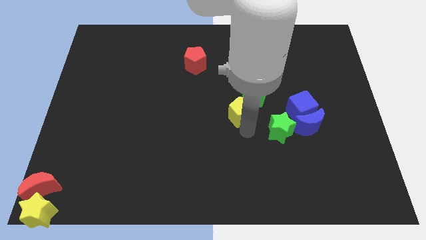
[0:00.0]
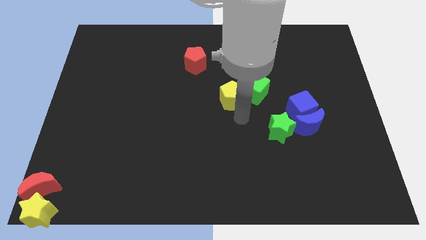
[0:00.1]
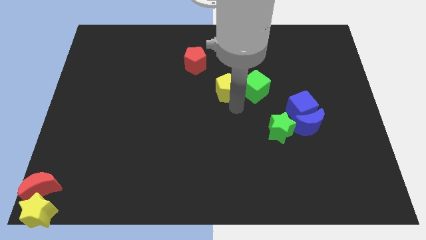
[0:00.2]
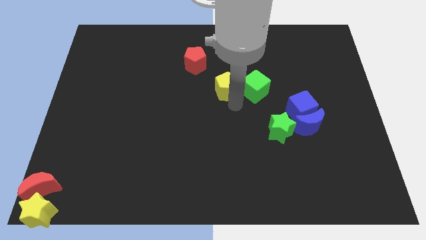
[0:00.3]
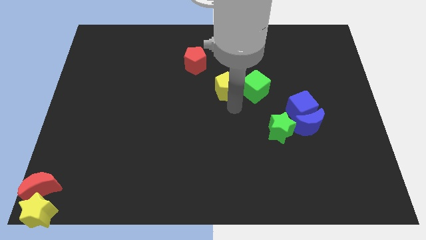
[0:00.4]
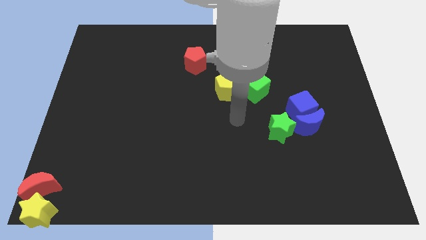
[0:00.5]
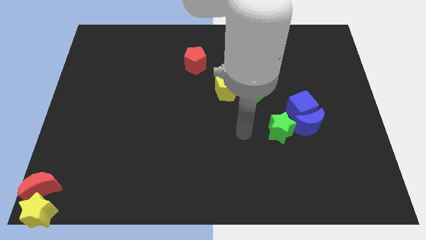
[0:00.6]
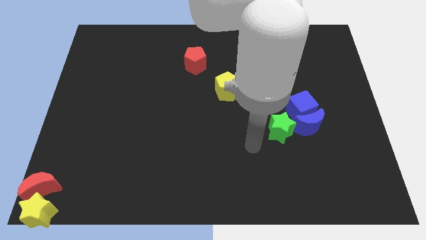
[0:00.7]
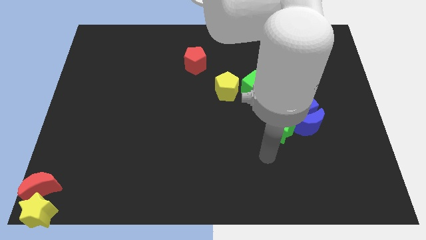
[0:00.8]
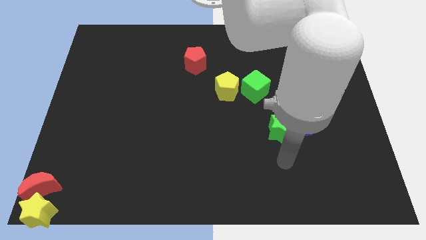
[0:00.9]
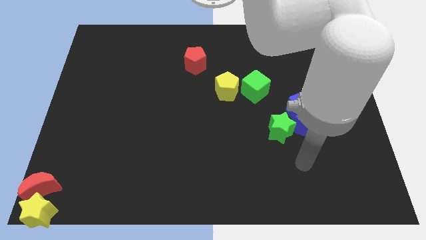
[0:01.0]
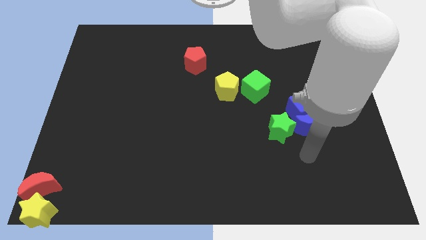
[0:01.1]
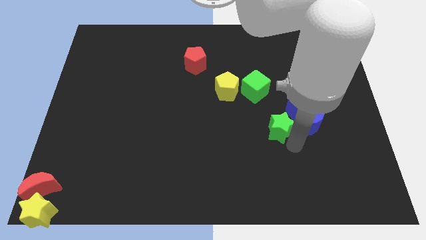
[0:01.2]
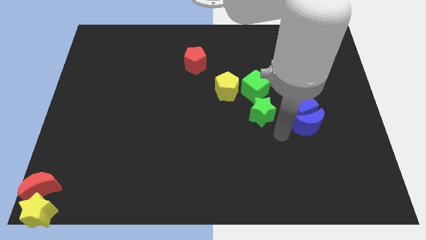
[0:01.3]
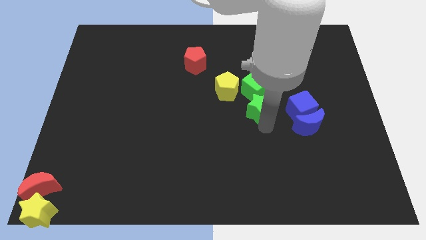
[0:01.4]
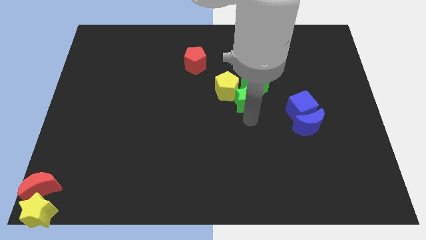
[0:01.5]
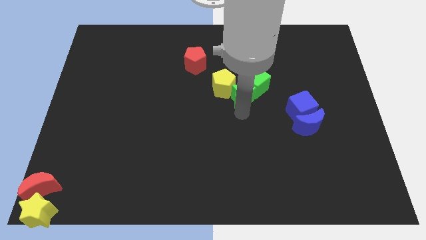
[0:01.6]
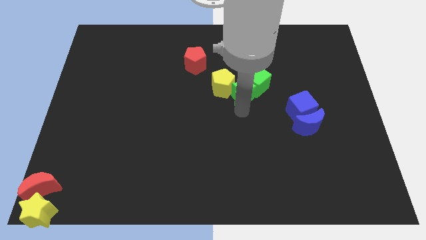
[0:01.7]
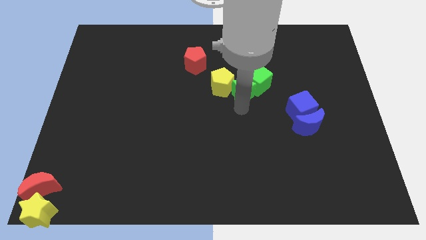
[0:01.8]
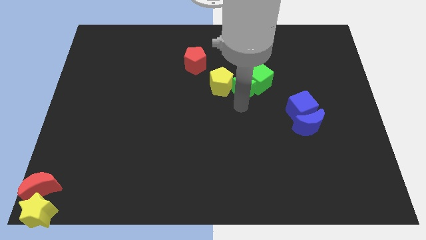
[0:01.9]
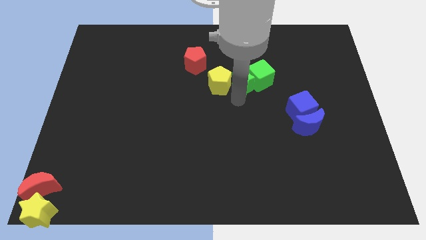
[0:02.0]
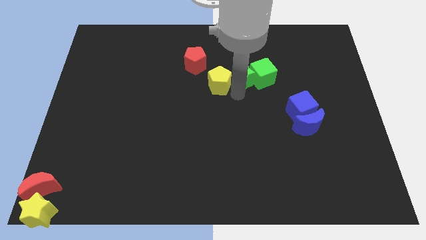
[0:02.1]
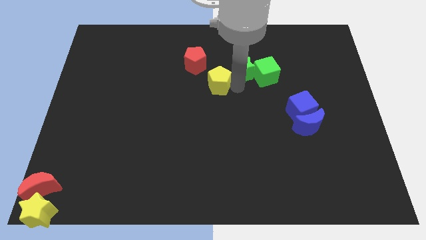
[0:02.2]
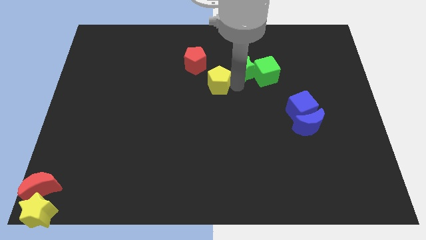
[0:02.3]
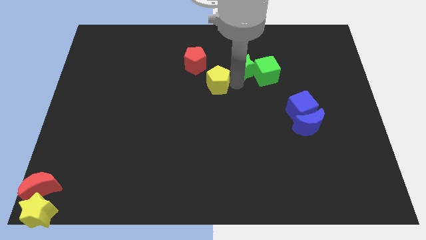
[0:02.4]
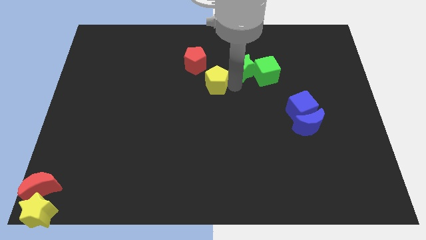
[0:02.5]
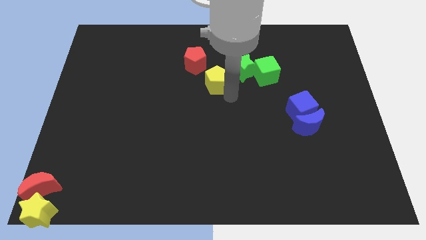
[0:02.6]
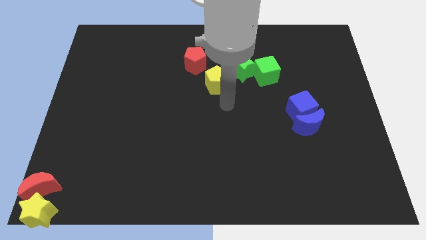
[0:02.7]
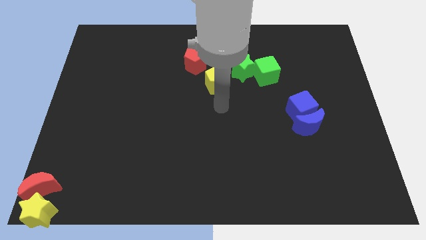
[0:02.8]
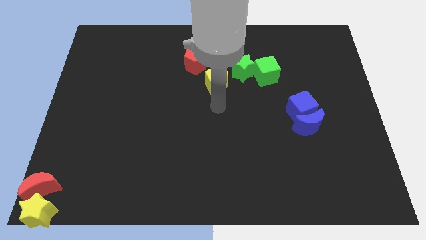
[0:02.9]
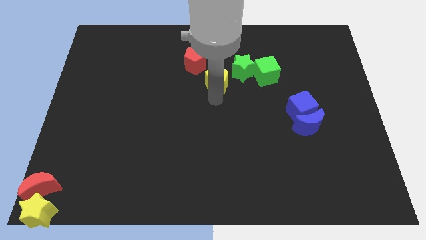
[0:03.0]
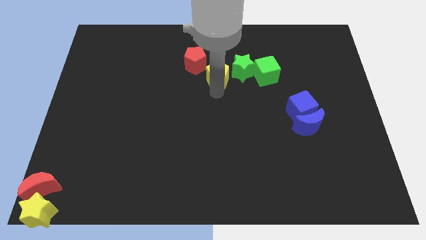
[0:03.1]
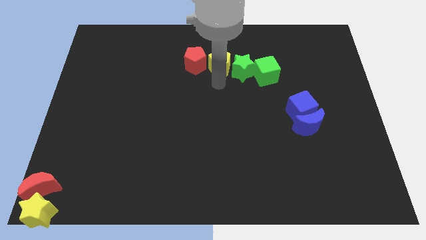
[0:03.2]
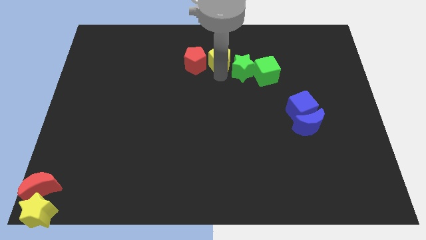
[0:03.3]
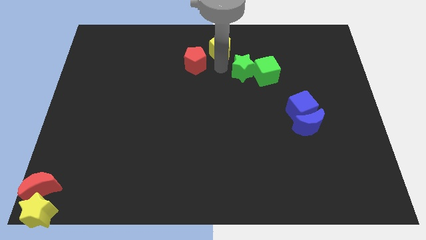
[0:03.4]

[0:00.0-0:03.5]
place green blocks and yellow pentagon horizontally with red pentagon

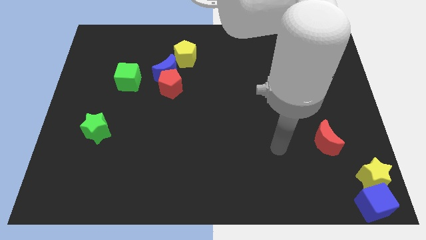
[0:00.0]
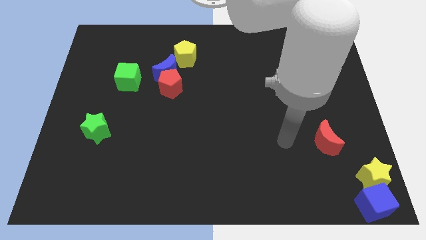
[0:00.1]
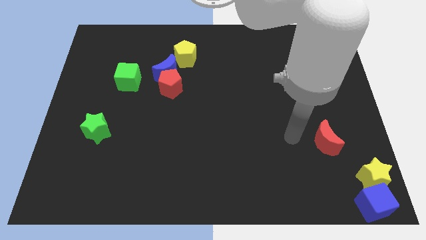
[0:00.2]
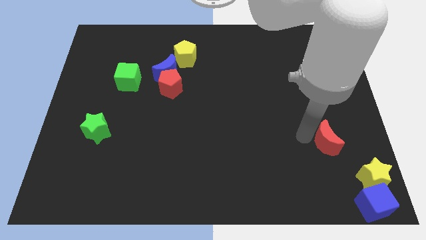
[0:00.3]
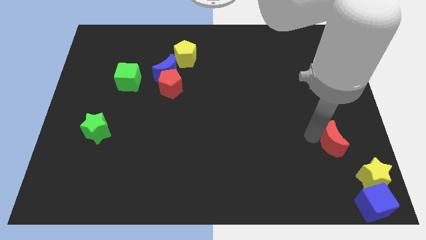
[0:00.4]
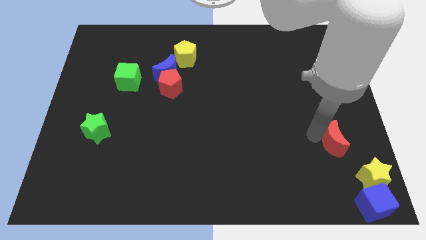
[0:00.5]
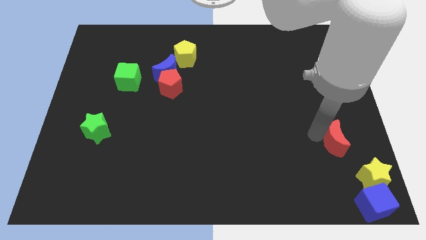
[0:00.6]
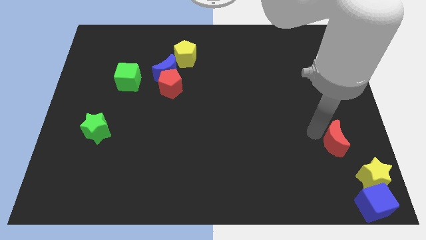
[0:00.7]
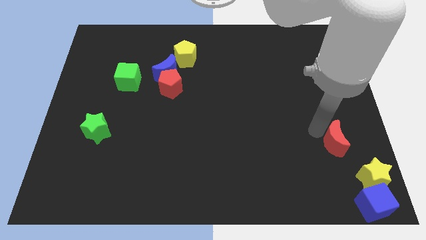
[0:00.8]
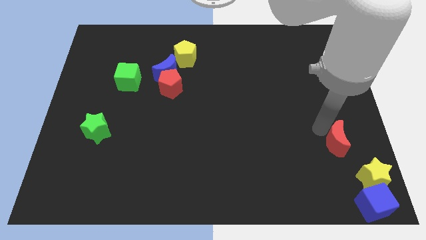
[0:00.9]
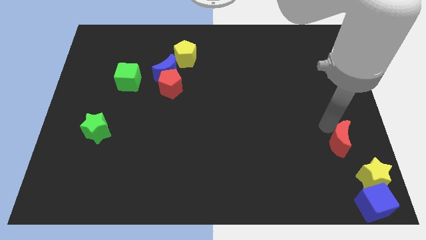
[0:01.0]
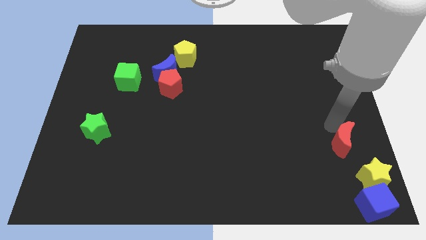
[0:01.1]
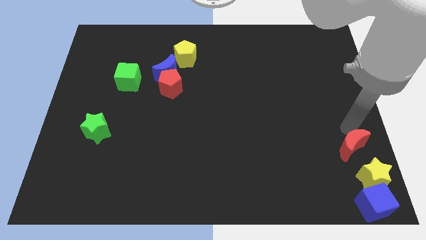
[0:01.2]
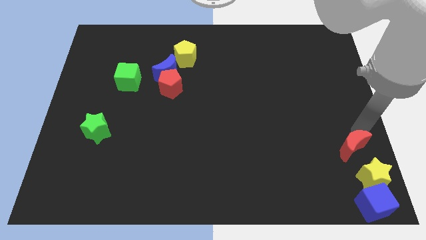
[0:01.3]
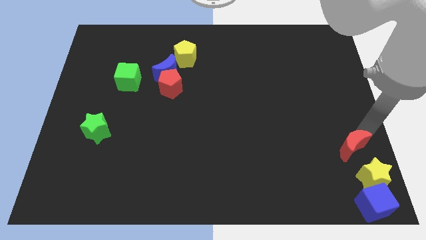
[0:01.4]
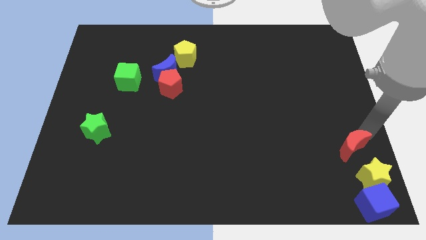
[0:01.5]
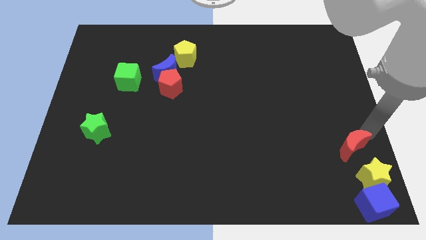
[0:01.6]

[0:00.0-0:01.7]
push the red crescent towards the top of the yellow star

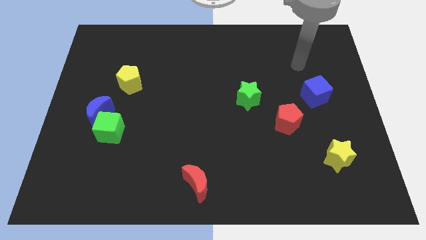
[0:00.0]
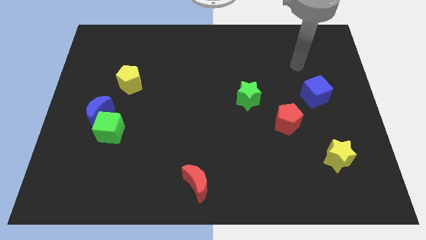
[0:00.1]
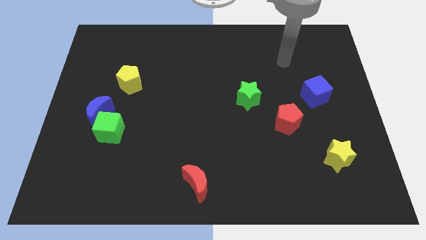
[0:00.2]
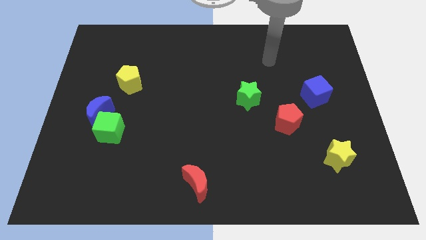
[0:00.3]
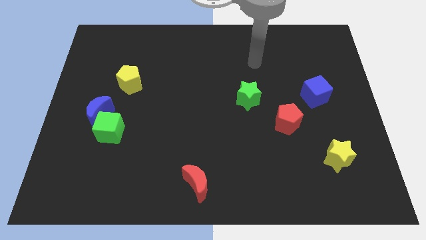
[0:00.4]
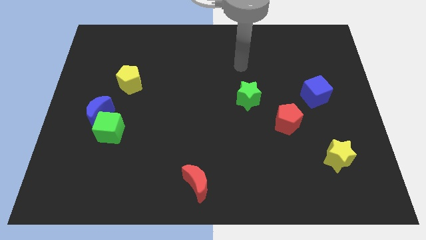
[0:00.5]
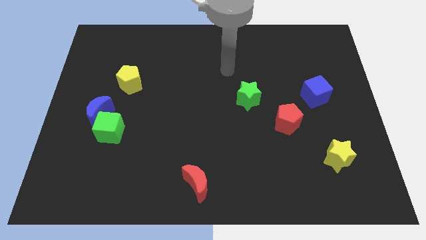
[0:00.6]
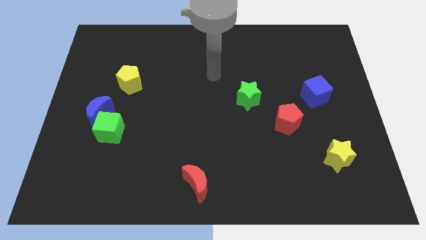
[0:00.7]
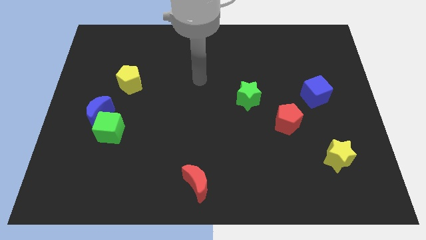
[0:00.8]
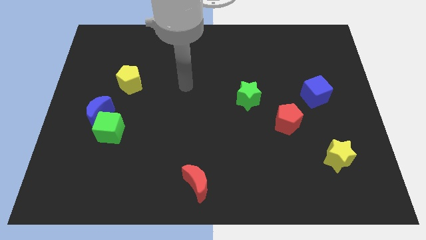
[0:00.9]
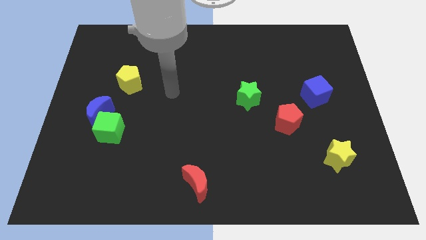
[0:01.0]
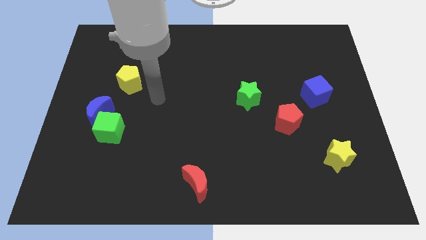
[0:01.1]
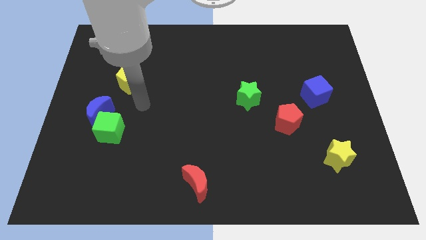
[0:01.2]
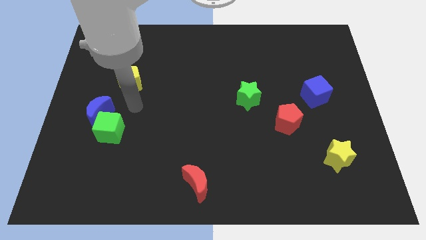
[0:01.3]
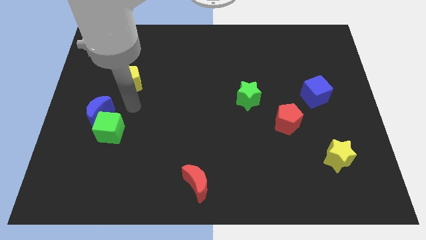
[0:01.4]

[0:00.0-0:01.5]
point your arm below the yellow pentagon

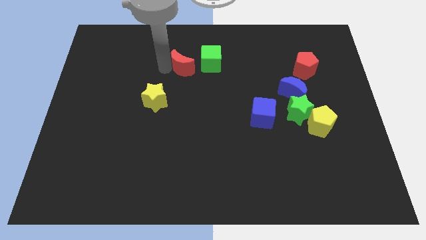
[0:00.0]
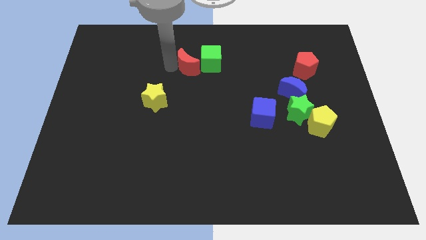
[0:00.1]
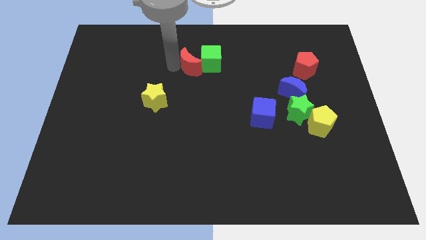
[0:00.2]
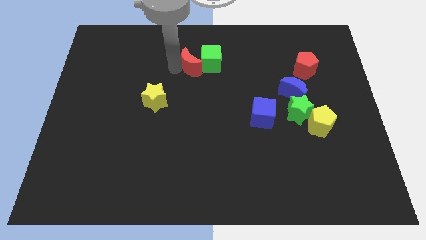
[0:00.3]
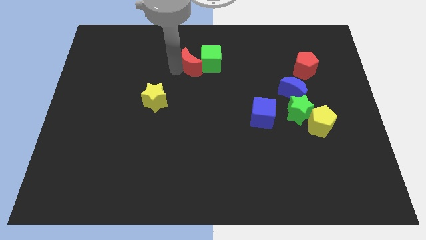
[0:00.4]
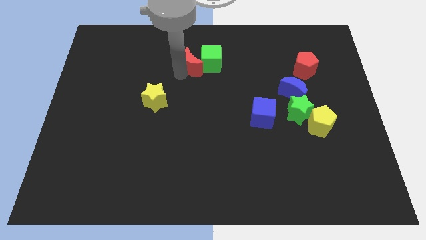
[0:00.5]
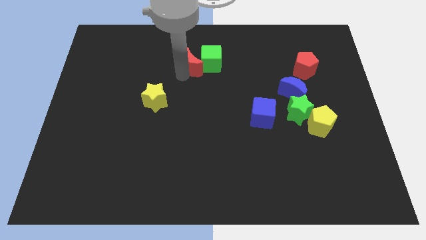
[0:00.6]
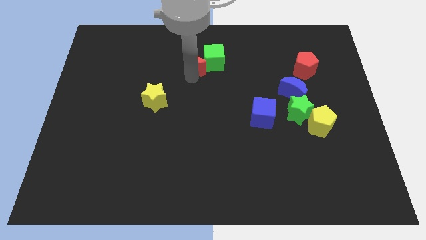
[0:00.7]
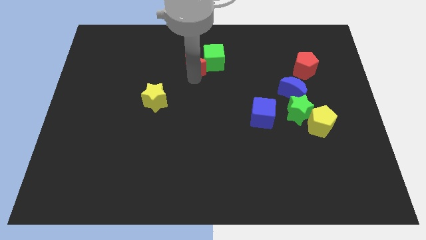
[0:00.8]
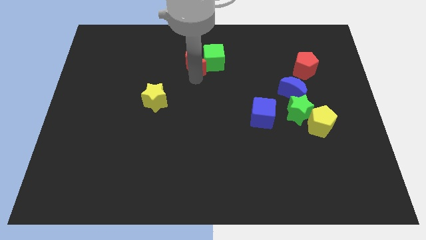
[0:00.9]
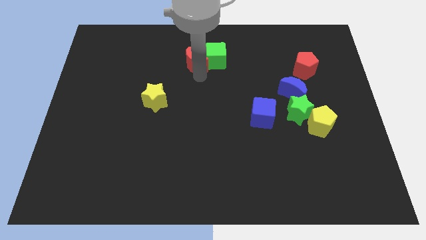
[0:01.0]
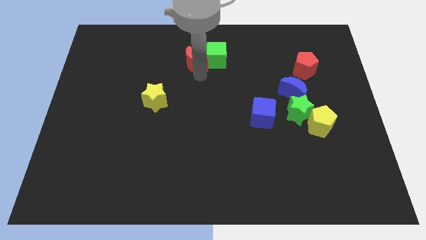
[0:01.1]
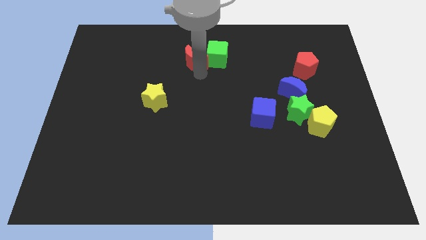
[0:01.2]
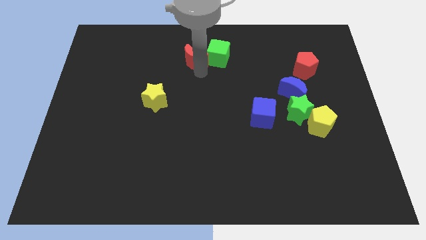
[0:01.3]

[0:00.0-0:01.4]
move the red crescent into green cube

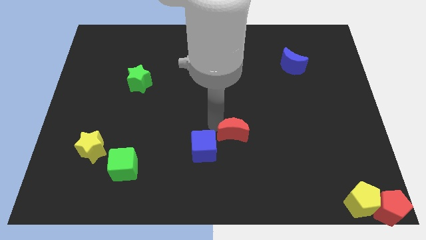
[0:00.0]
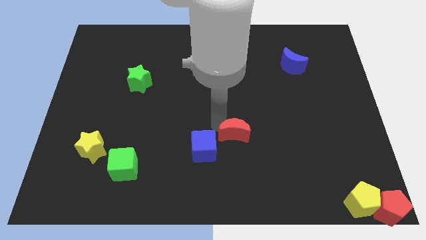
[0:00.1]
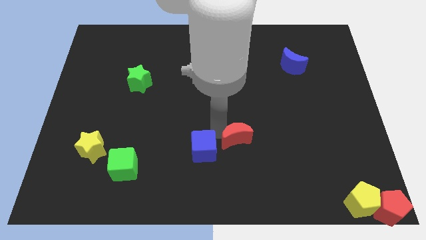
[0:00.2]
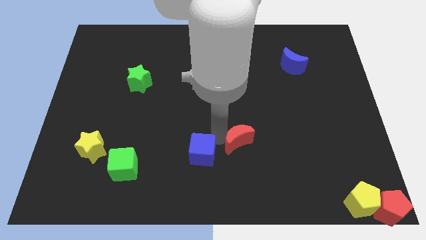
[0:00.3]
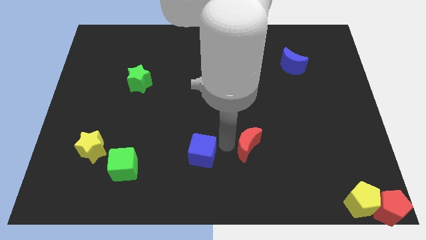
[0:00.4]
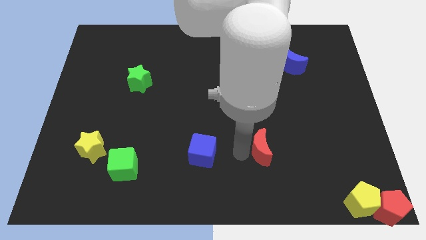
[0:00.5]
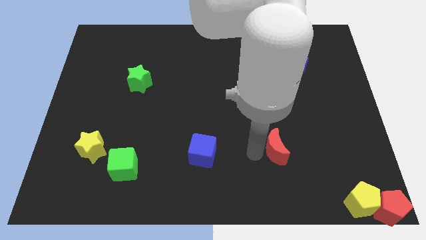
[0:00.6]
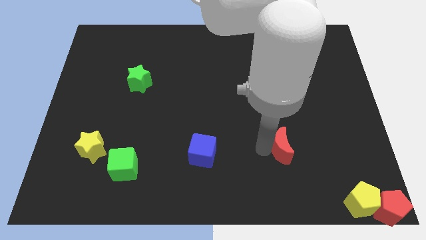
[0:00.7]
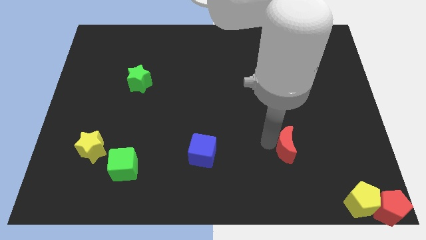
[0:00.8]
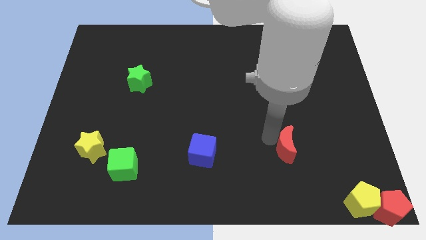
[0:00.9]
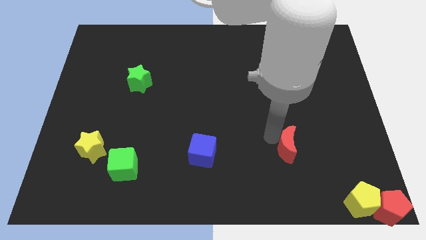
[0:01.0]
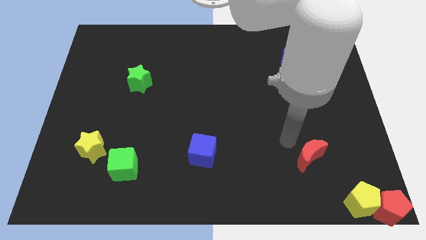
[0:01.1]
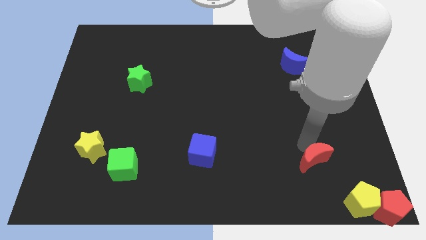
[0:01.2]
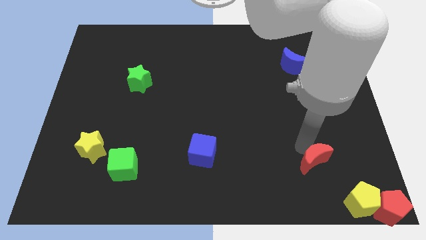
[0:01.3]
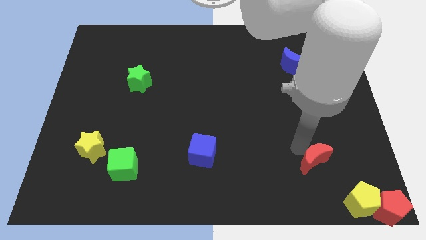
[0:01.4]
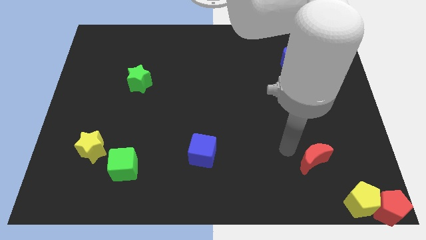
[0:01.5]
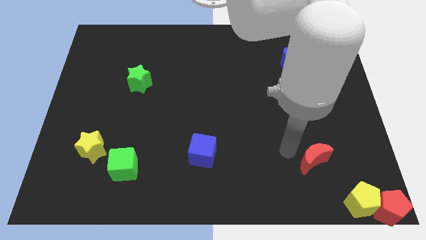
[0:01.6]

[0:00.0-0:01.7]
separate red moon from blue cube
